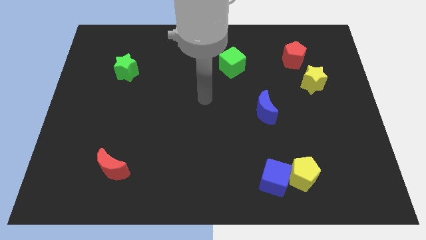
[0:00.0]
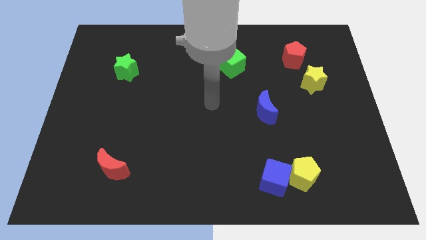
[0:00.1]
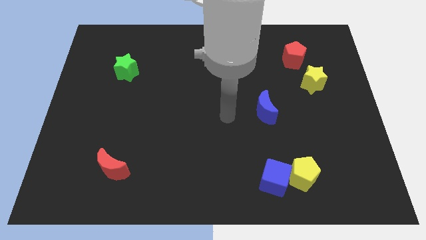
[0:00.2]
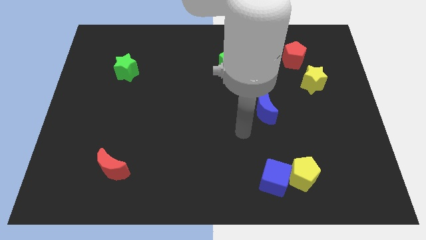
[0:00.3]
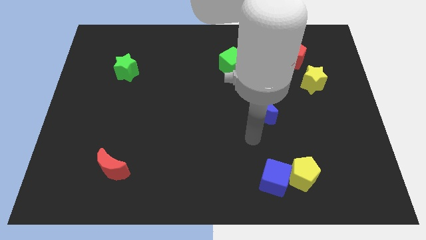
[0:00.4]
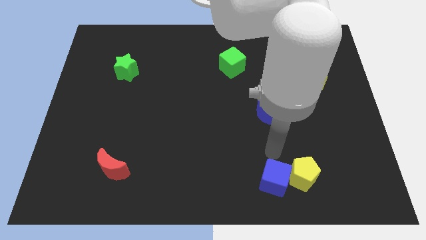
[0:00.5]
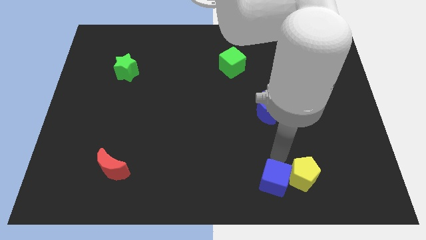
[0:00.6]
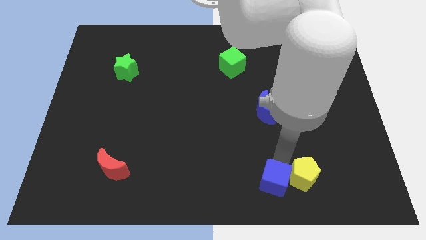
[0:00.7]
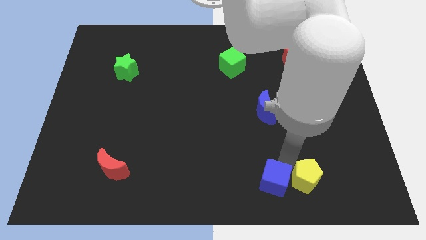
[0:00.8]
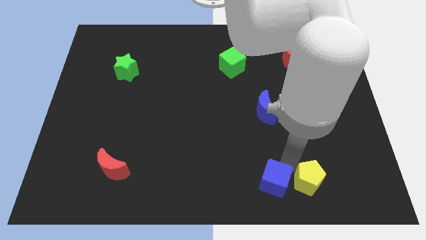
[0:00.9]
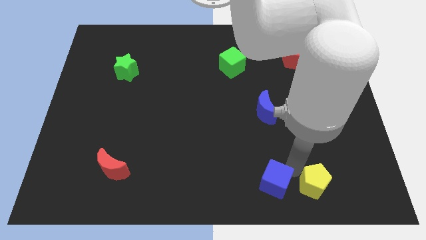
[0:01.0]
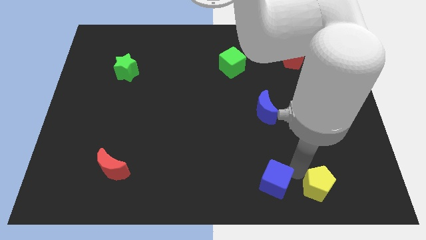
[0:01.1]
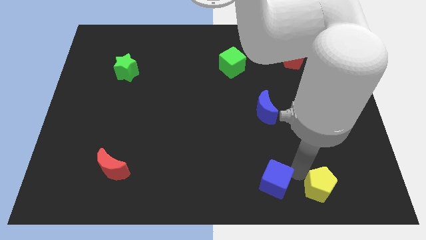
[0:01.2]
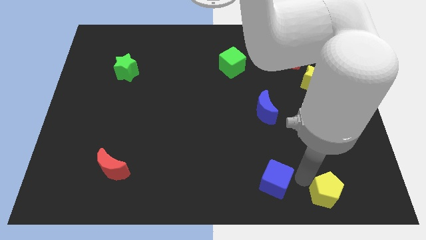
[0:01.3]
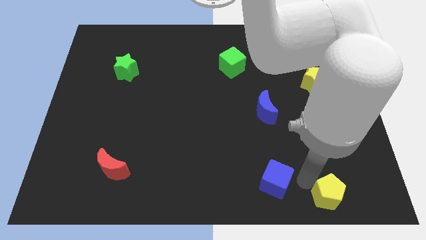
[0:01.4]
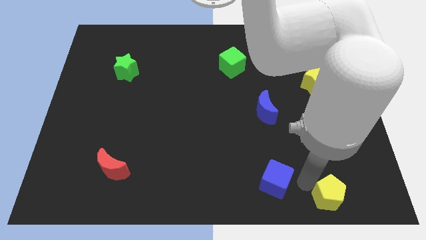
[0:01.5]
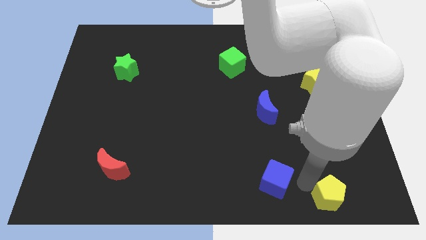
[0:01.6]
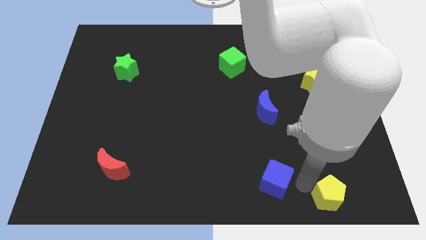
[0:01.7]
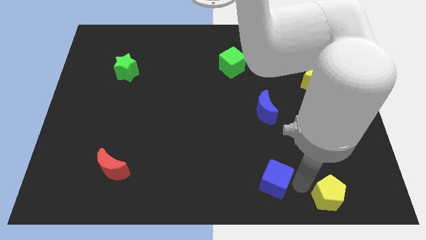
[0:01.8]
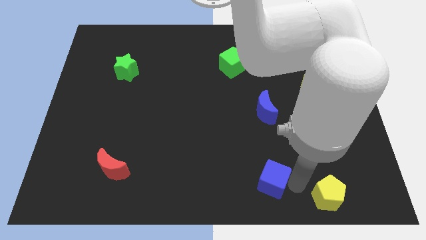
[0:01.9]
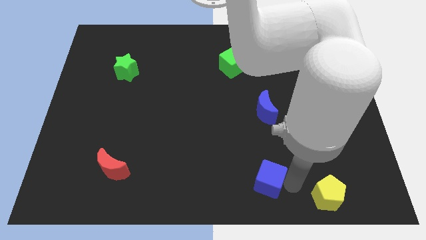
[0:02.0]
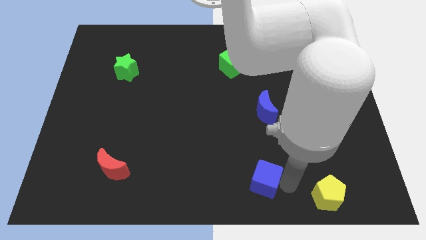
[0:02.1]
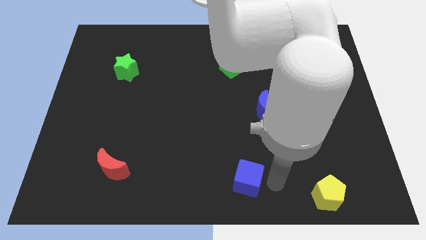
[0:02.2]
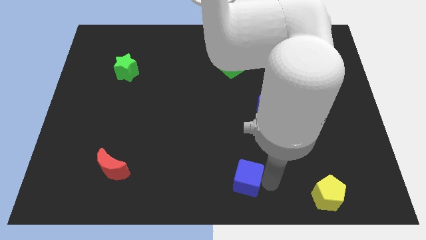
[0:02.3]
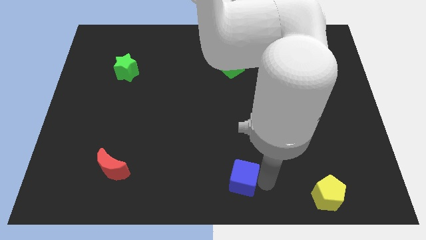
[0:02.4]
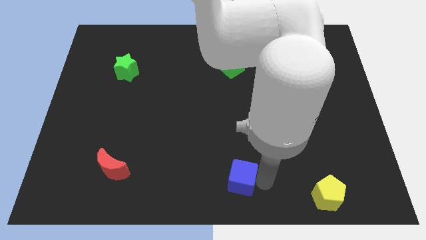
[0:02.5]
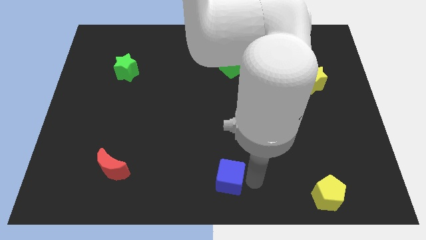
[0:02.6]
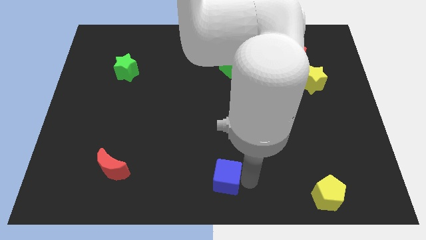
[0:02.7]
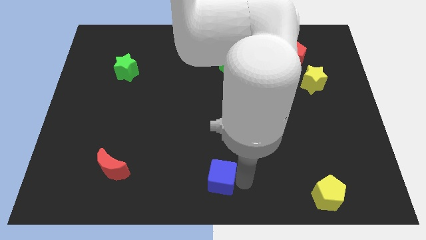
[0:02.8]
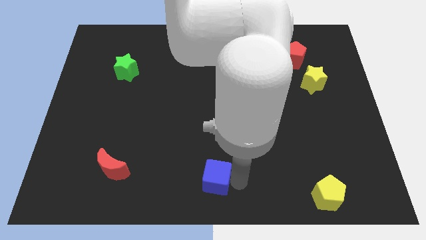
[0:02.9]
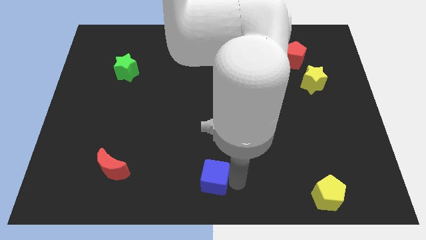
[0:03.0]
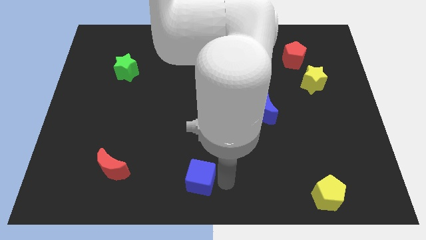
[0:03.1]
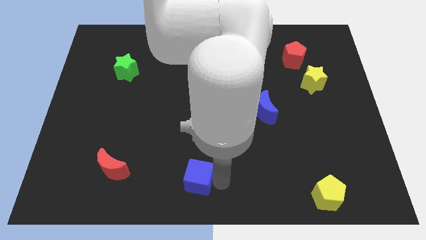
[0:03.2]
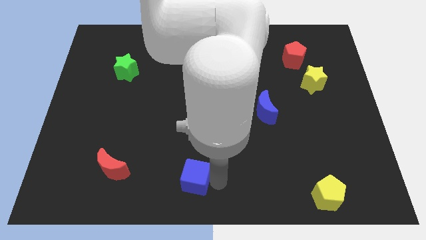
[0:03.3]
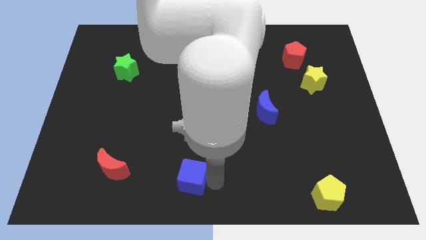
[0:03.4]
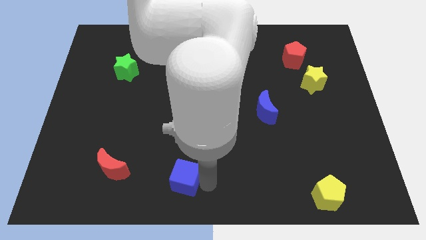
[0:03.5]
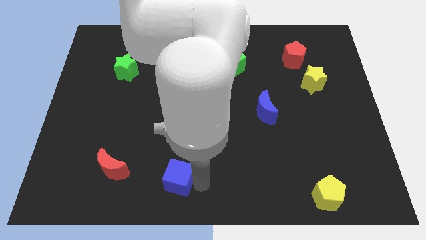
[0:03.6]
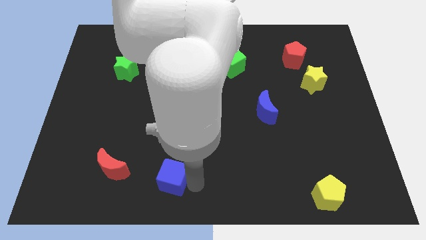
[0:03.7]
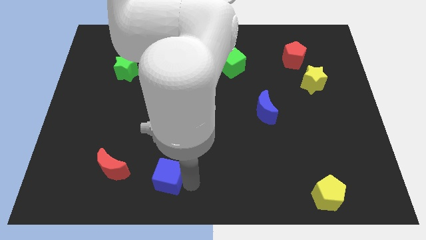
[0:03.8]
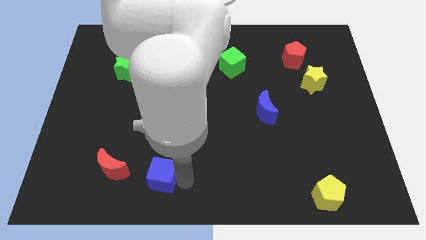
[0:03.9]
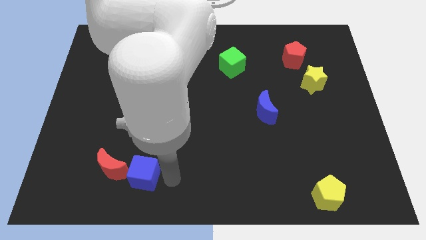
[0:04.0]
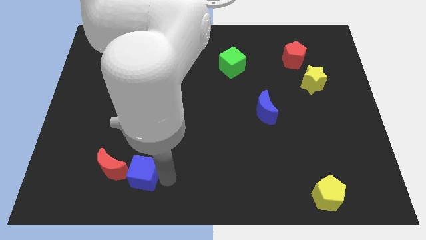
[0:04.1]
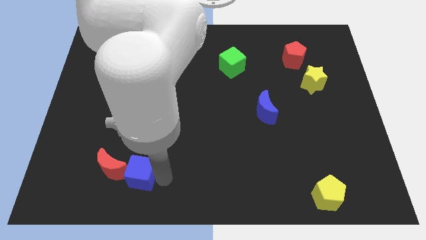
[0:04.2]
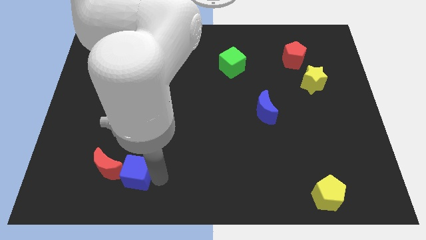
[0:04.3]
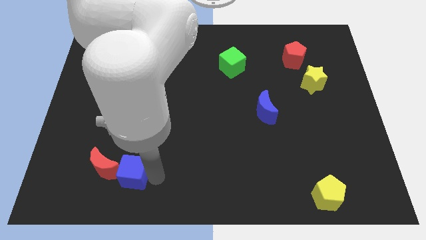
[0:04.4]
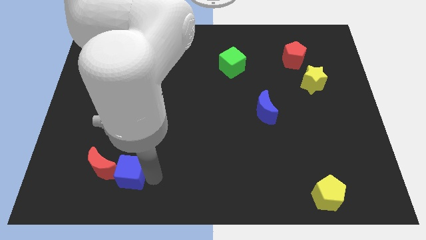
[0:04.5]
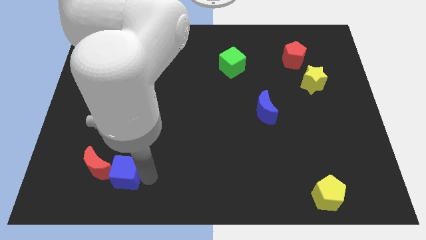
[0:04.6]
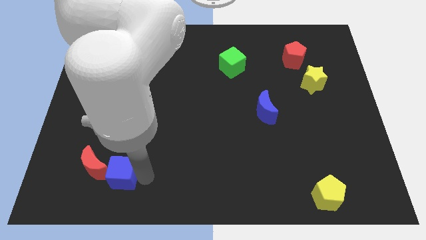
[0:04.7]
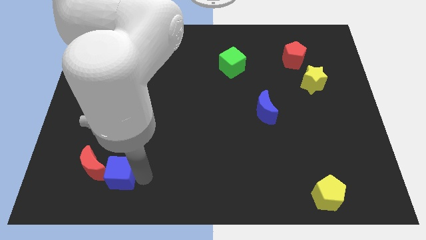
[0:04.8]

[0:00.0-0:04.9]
push the blue cube next to the red moon

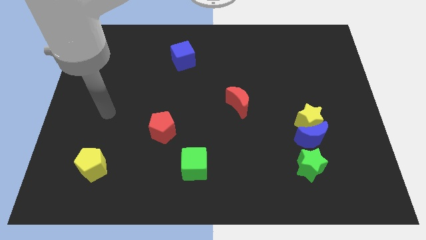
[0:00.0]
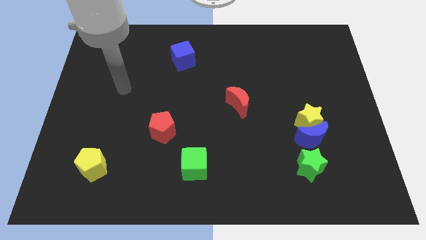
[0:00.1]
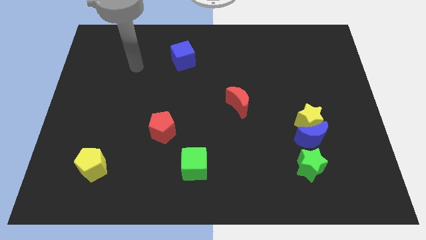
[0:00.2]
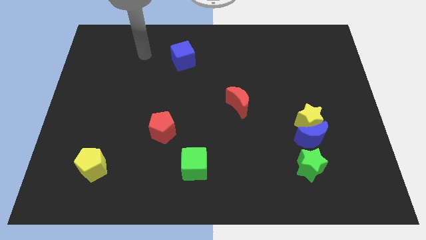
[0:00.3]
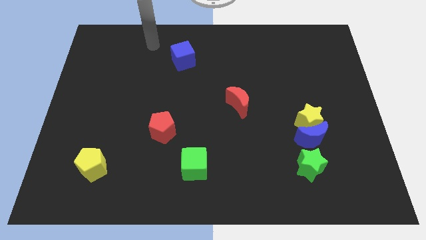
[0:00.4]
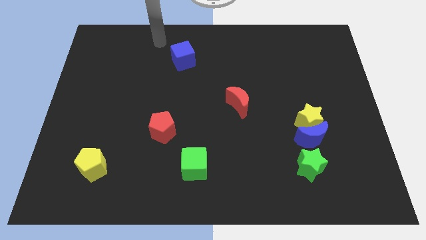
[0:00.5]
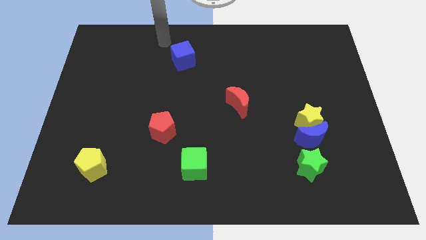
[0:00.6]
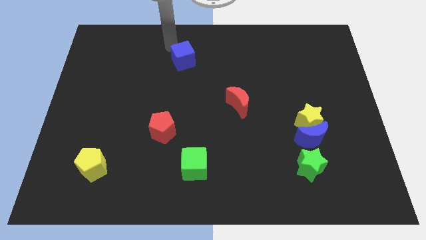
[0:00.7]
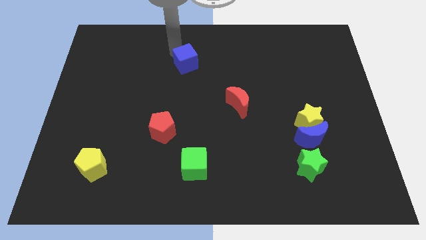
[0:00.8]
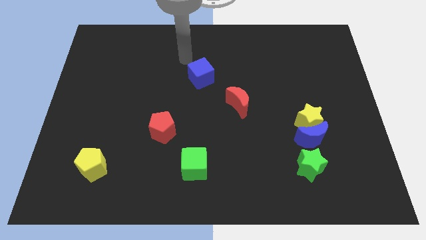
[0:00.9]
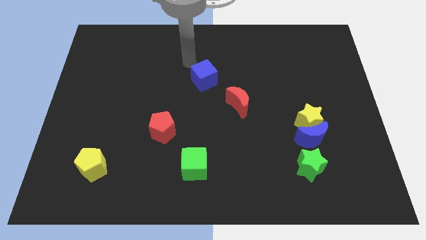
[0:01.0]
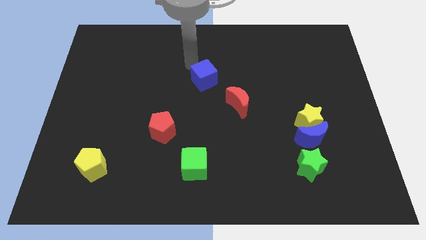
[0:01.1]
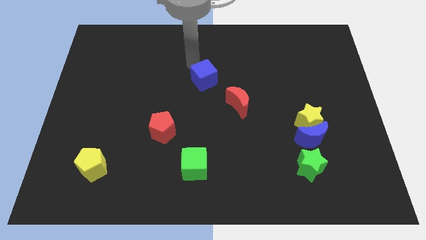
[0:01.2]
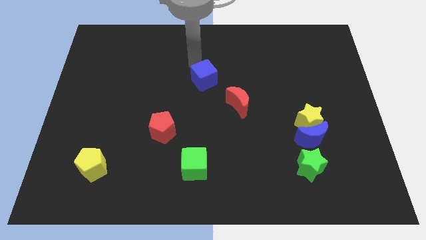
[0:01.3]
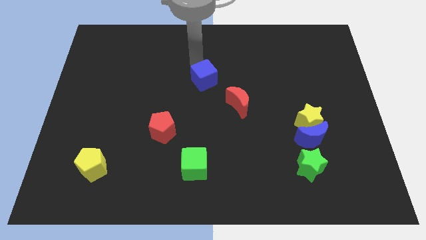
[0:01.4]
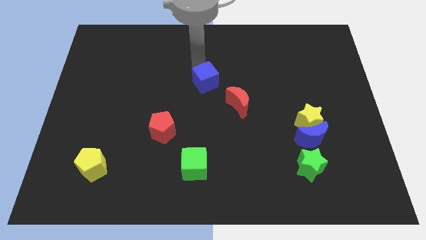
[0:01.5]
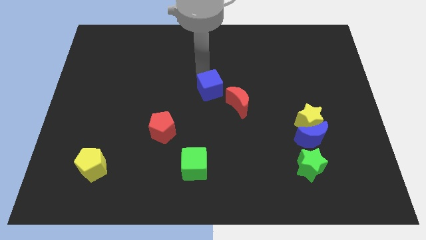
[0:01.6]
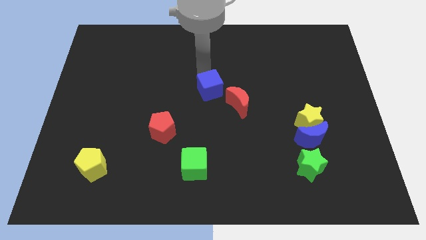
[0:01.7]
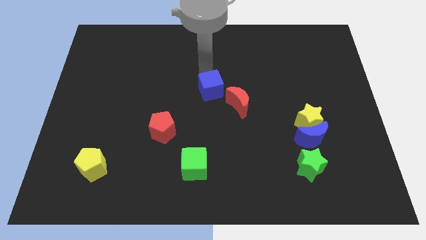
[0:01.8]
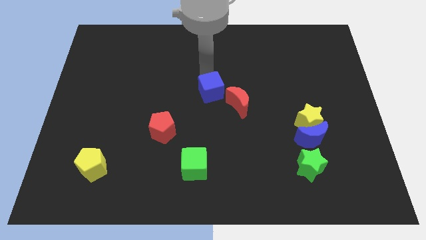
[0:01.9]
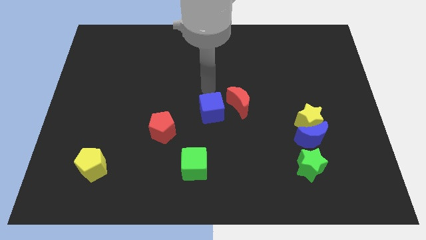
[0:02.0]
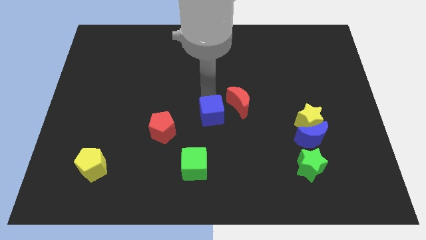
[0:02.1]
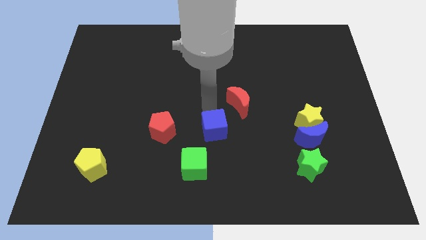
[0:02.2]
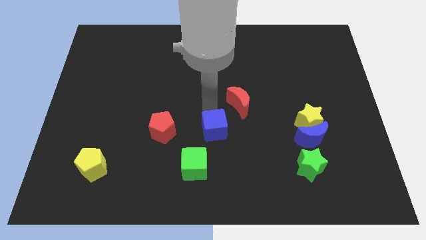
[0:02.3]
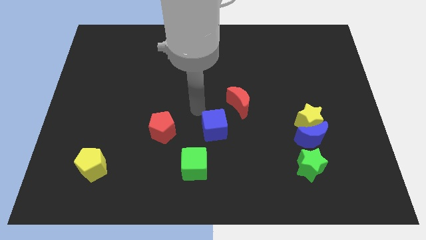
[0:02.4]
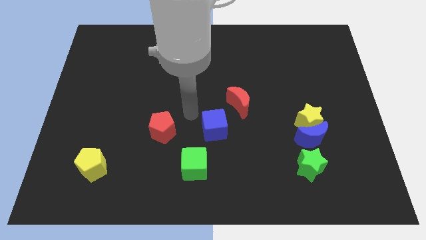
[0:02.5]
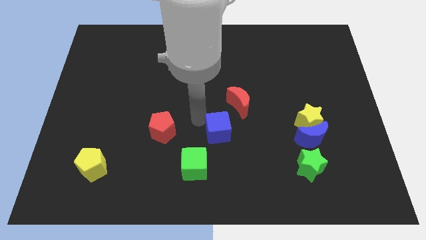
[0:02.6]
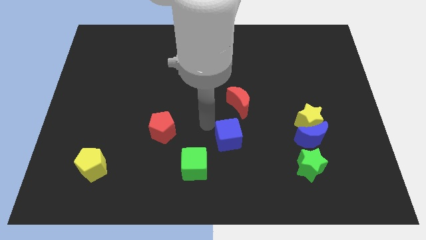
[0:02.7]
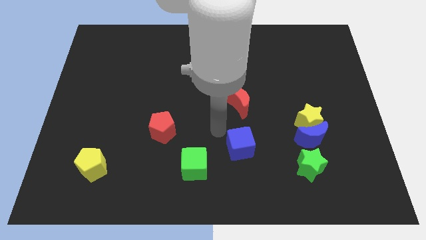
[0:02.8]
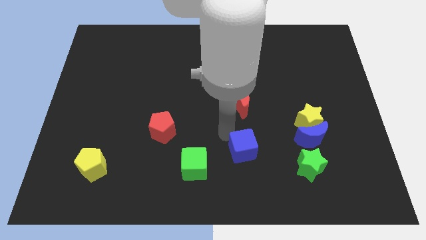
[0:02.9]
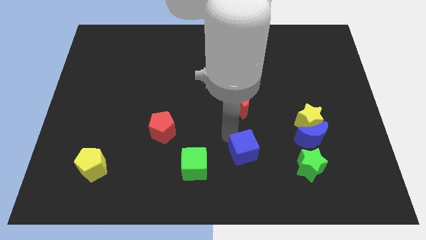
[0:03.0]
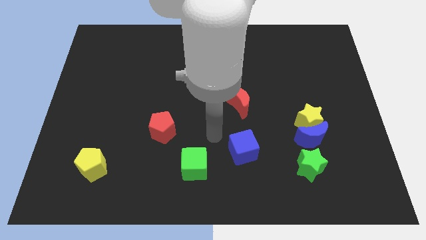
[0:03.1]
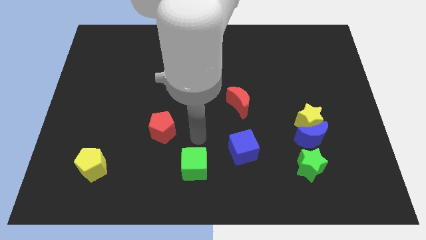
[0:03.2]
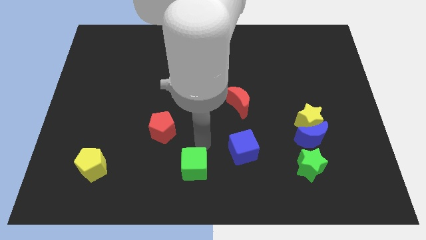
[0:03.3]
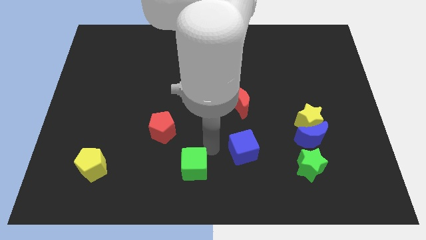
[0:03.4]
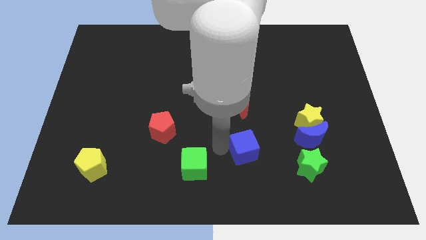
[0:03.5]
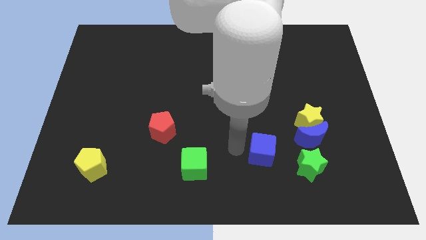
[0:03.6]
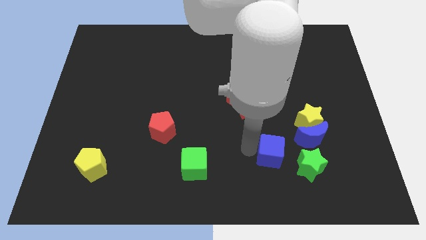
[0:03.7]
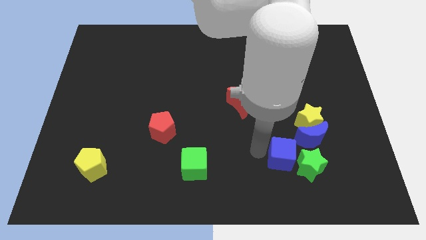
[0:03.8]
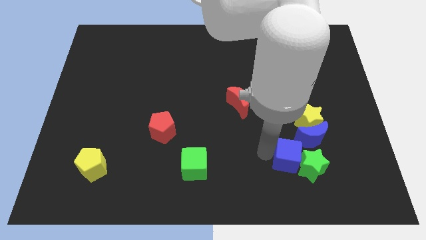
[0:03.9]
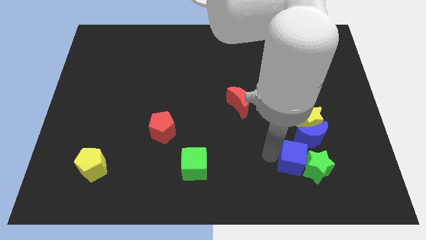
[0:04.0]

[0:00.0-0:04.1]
move the blue cube to the green star
